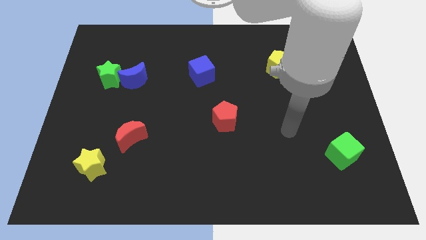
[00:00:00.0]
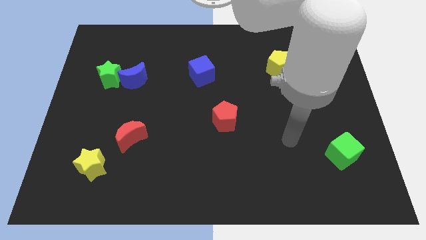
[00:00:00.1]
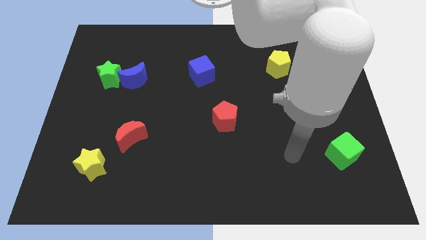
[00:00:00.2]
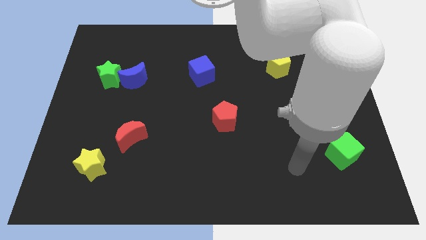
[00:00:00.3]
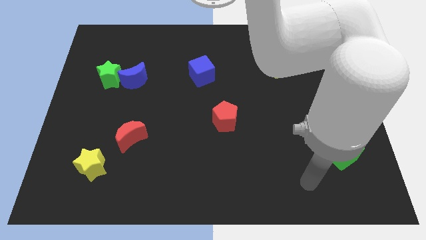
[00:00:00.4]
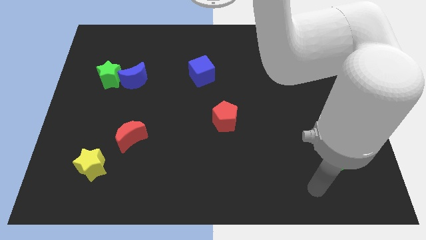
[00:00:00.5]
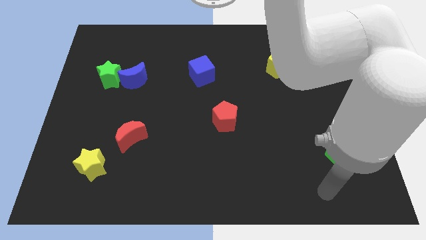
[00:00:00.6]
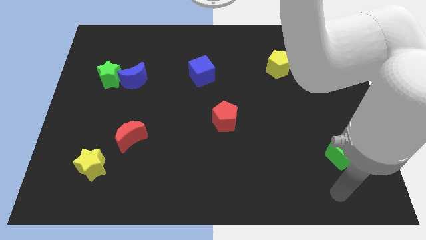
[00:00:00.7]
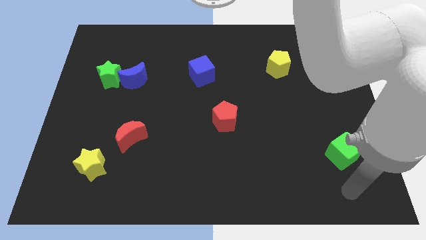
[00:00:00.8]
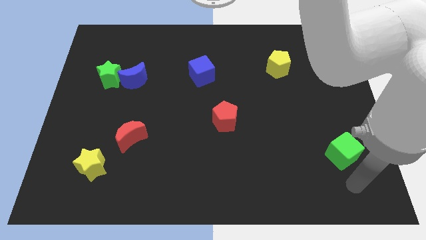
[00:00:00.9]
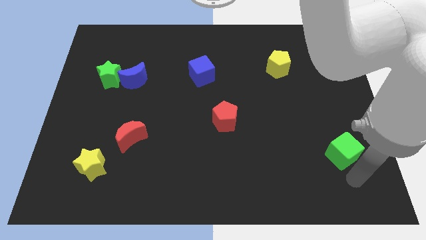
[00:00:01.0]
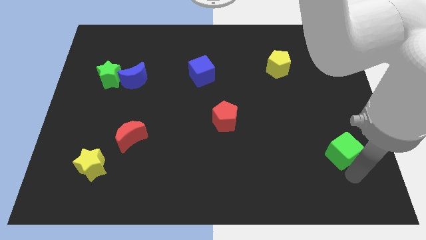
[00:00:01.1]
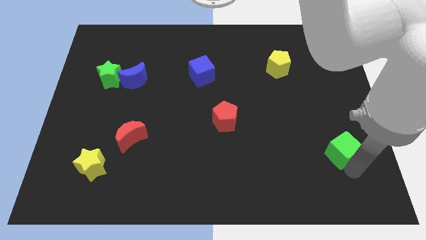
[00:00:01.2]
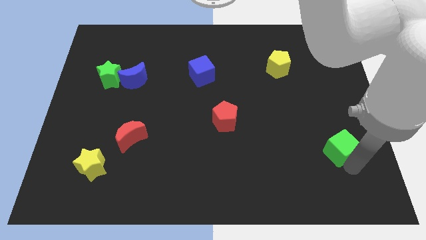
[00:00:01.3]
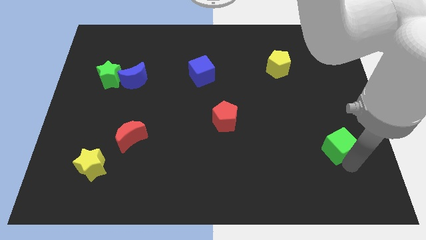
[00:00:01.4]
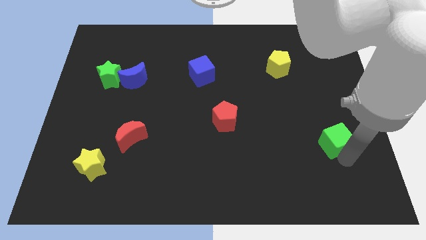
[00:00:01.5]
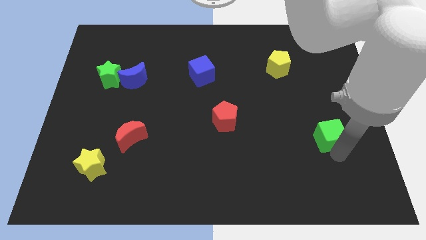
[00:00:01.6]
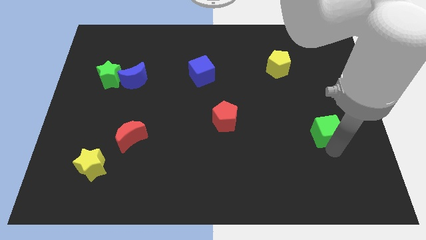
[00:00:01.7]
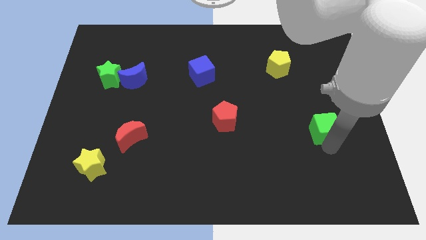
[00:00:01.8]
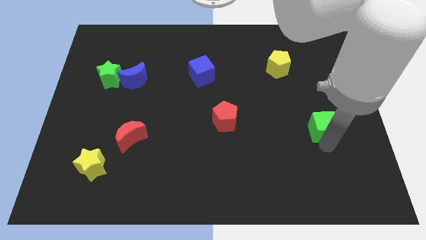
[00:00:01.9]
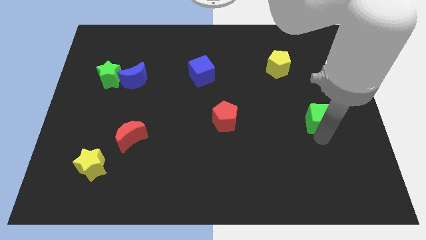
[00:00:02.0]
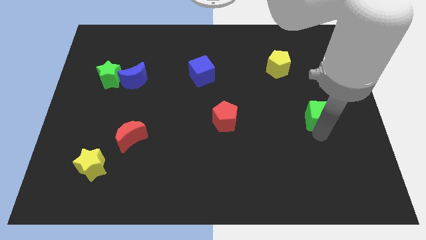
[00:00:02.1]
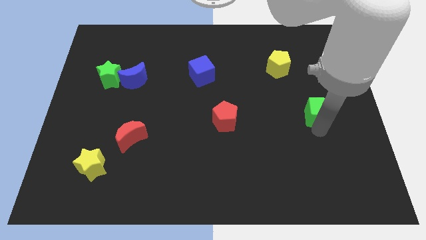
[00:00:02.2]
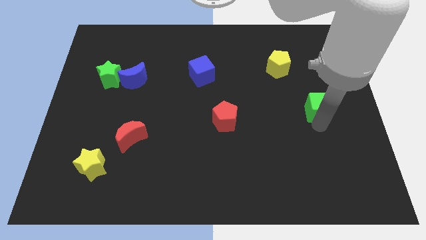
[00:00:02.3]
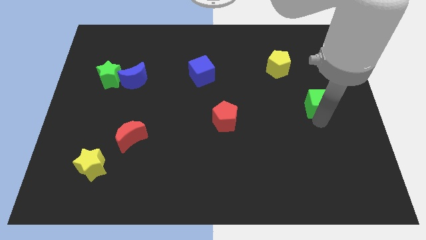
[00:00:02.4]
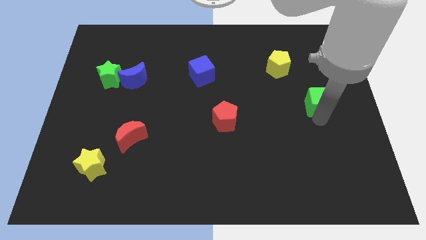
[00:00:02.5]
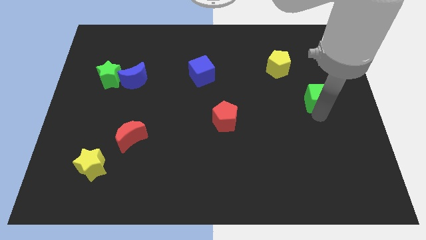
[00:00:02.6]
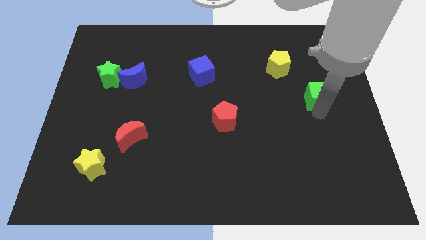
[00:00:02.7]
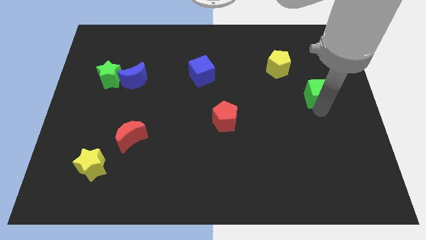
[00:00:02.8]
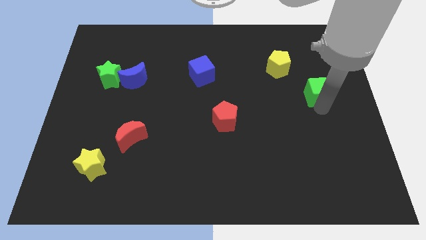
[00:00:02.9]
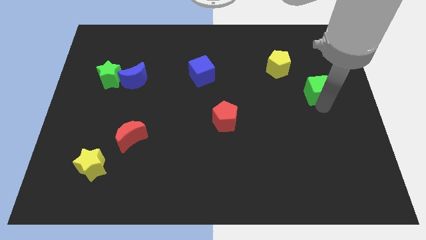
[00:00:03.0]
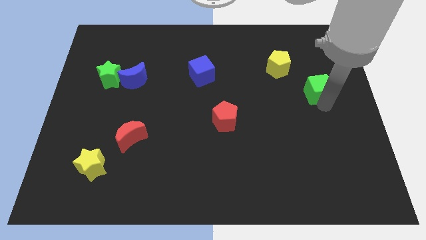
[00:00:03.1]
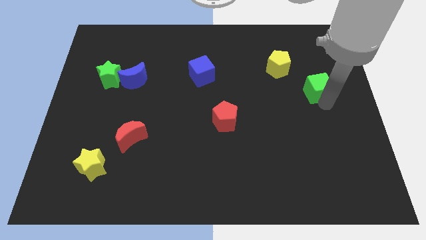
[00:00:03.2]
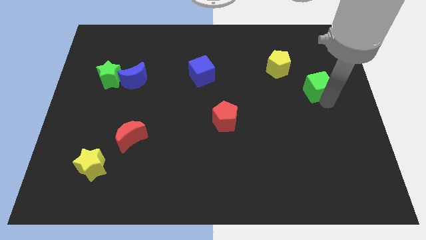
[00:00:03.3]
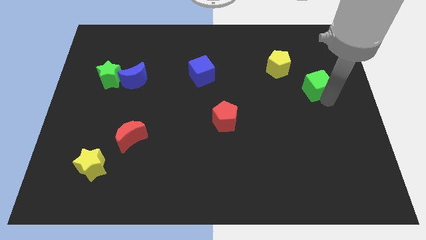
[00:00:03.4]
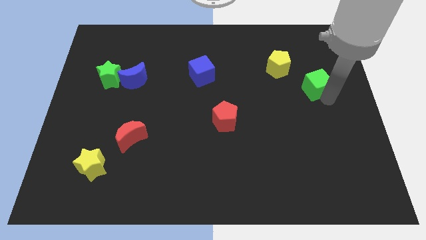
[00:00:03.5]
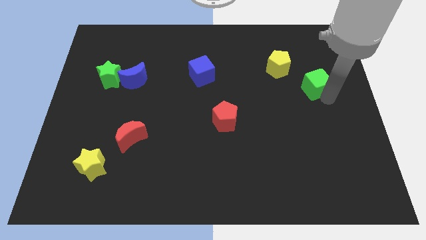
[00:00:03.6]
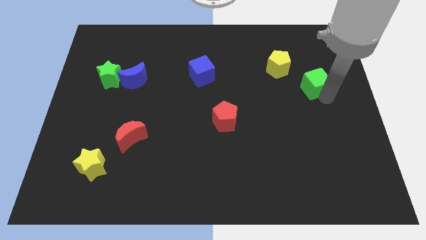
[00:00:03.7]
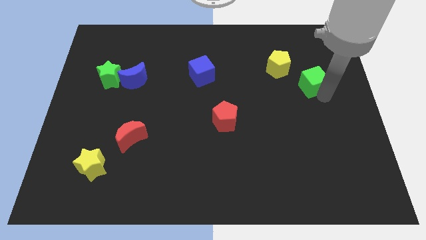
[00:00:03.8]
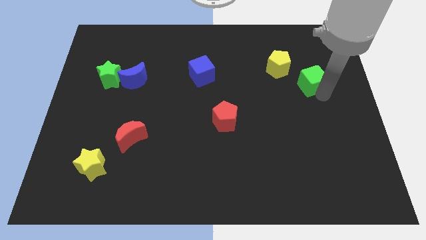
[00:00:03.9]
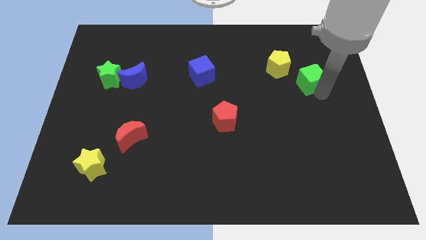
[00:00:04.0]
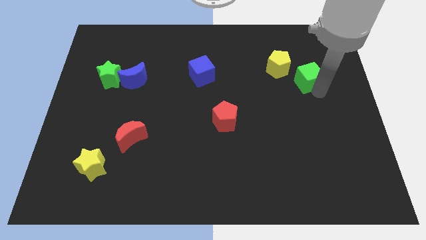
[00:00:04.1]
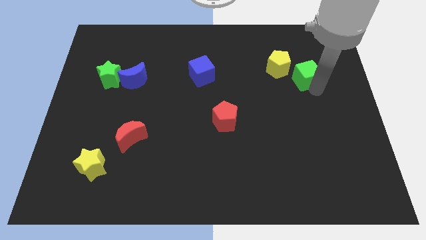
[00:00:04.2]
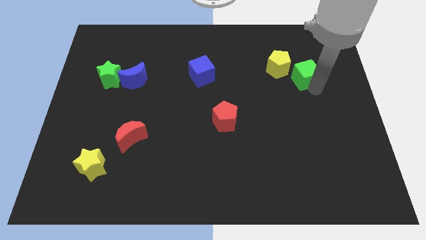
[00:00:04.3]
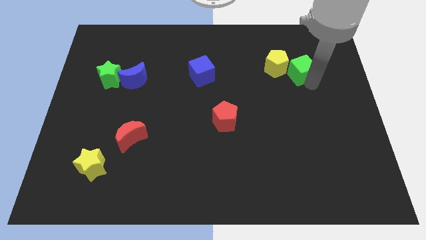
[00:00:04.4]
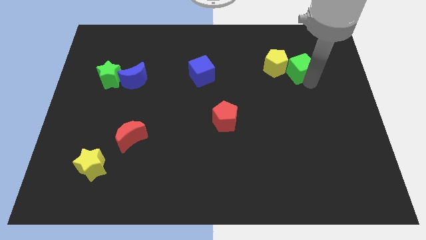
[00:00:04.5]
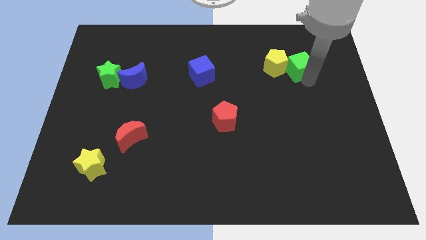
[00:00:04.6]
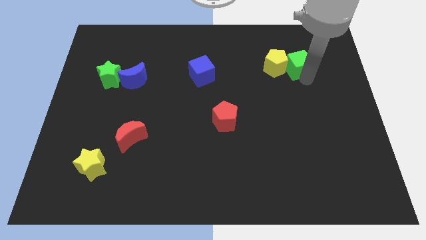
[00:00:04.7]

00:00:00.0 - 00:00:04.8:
push the green cube next to the yellow pentagon

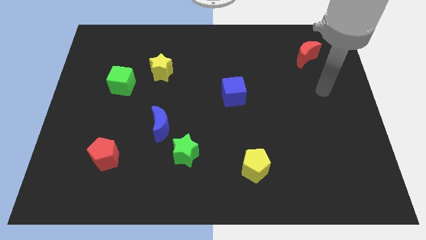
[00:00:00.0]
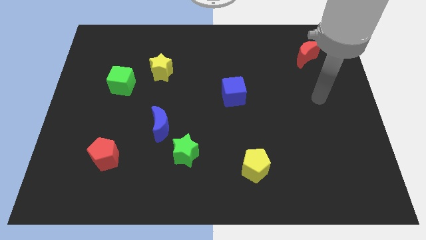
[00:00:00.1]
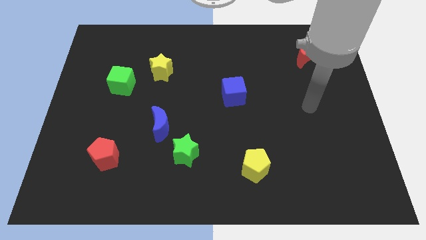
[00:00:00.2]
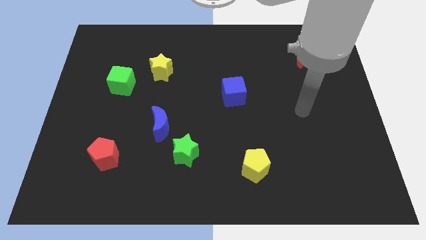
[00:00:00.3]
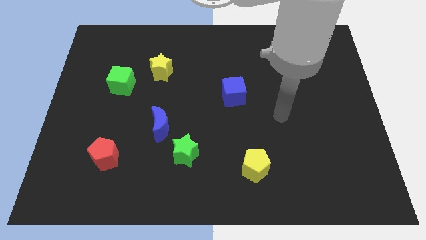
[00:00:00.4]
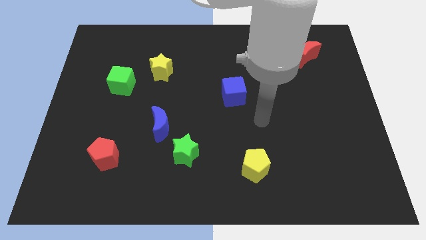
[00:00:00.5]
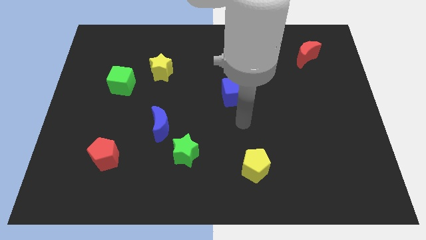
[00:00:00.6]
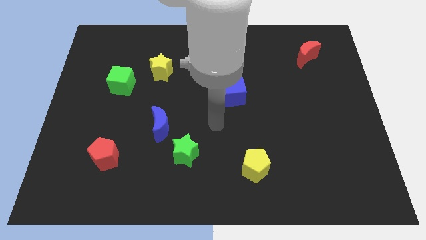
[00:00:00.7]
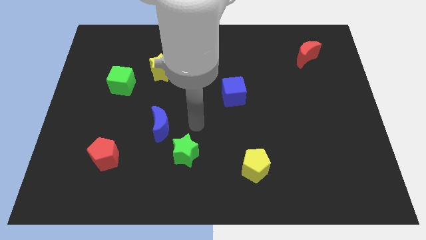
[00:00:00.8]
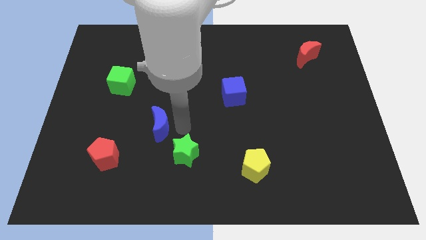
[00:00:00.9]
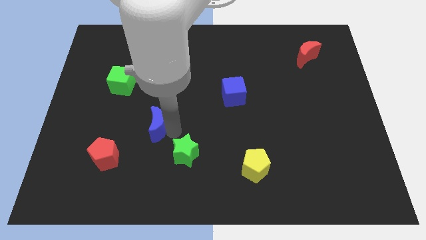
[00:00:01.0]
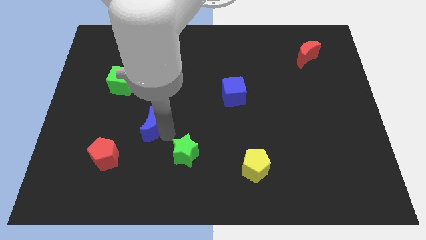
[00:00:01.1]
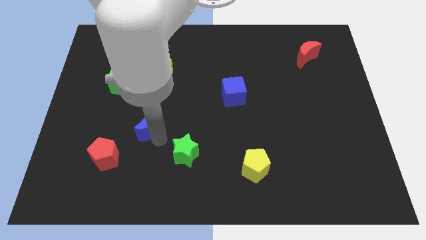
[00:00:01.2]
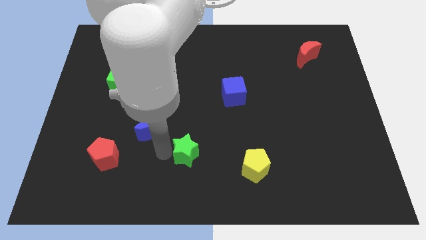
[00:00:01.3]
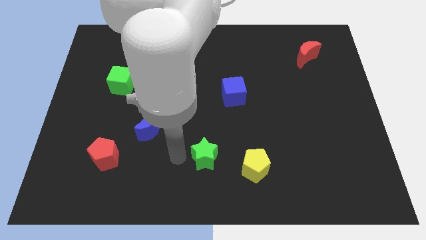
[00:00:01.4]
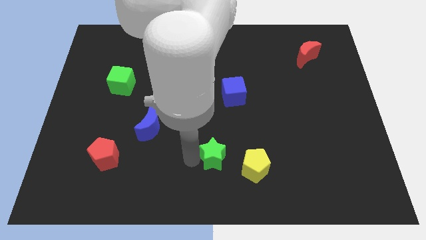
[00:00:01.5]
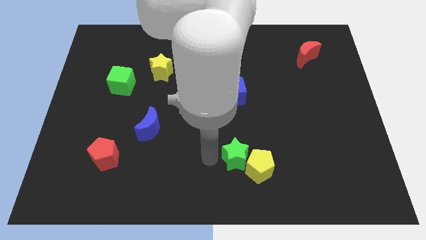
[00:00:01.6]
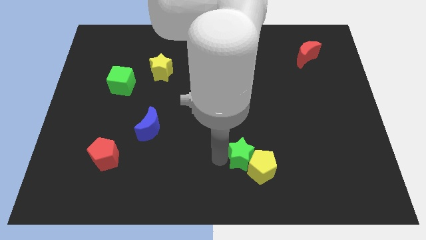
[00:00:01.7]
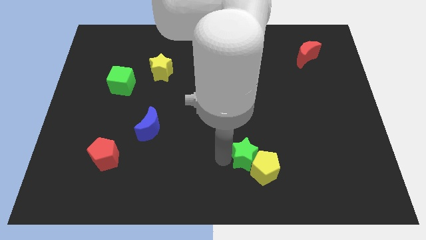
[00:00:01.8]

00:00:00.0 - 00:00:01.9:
put the green star to the yellow pentagon
